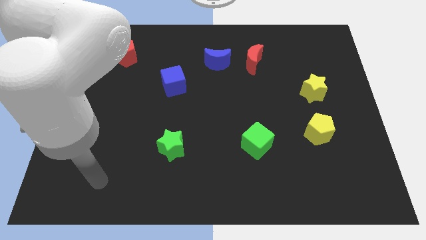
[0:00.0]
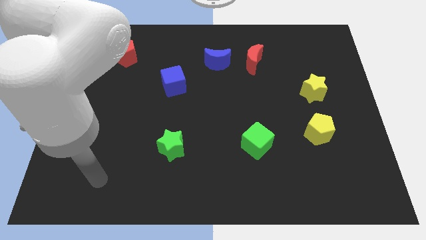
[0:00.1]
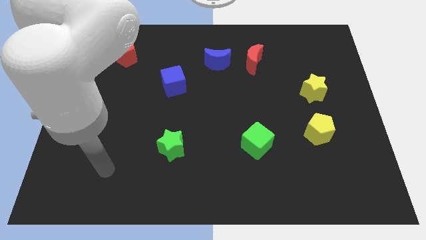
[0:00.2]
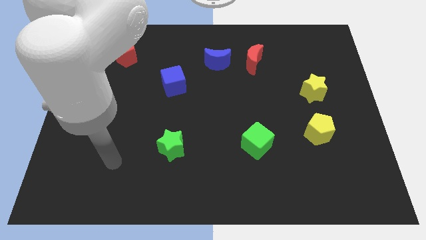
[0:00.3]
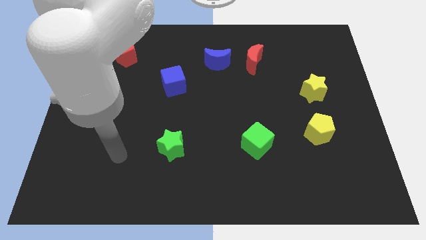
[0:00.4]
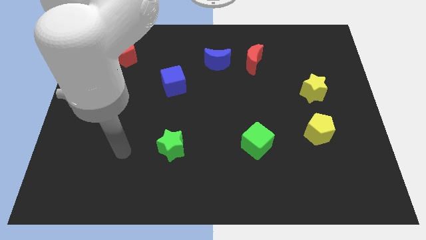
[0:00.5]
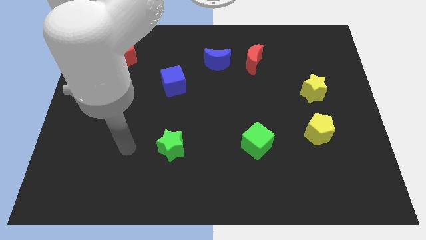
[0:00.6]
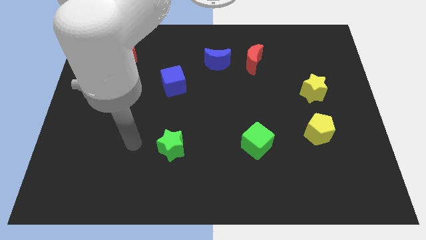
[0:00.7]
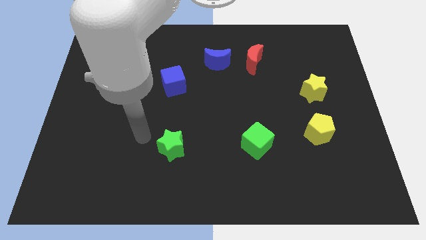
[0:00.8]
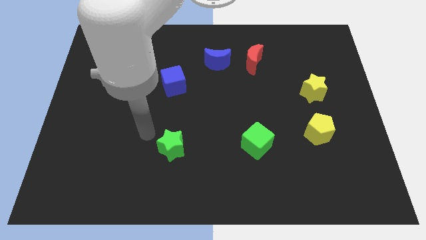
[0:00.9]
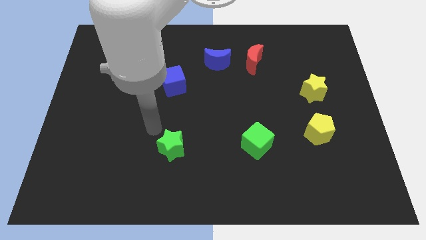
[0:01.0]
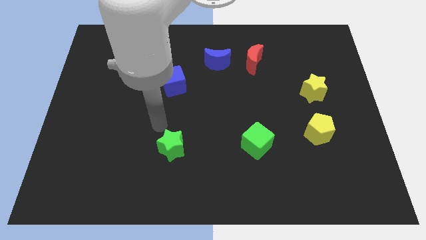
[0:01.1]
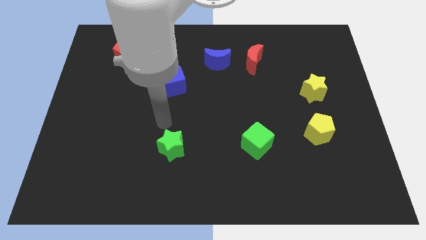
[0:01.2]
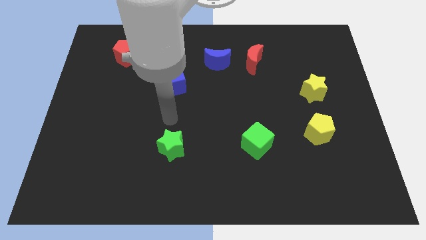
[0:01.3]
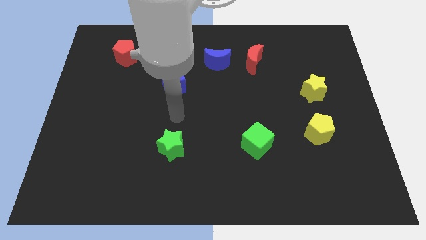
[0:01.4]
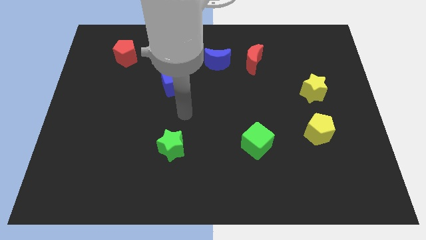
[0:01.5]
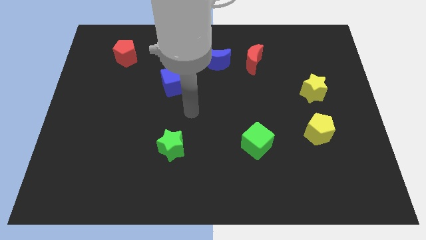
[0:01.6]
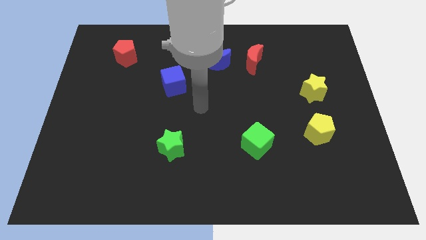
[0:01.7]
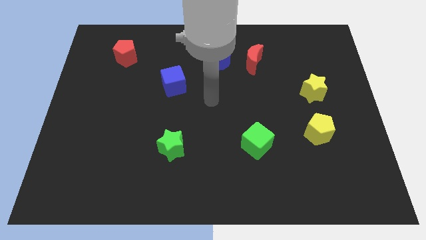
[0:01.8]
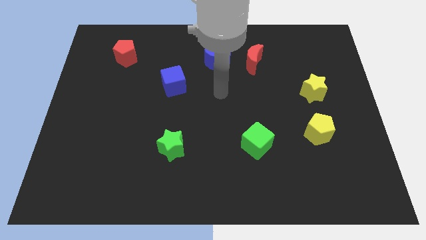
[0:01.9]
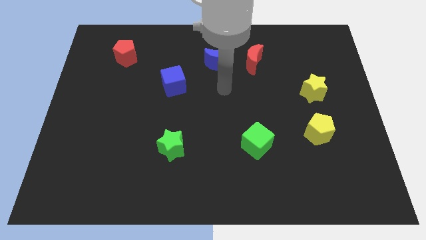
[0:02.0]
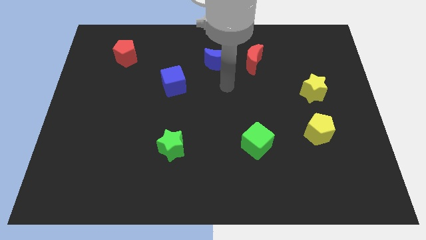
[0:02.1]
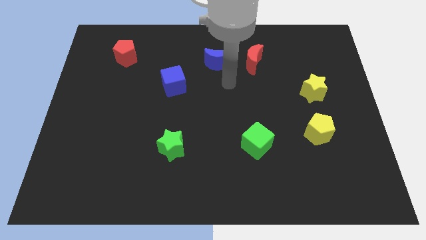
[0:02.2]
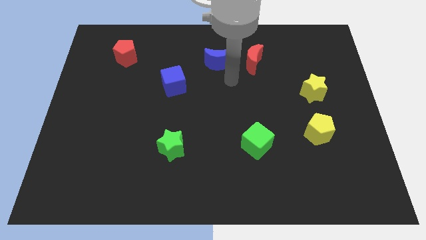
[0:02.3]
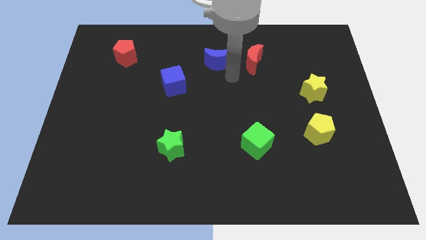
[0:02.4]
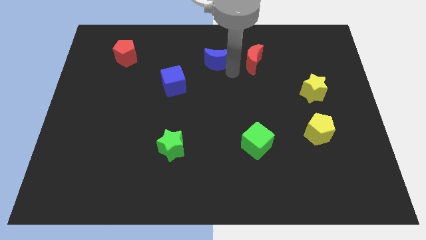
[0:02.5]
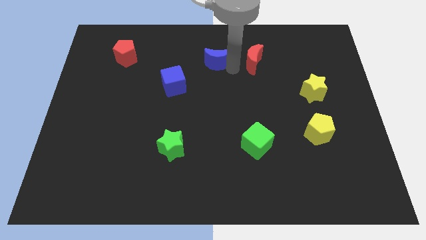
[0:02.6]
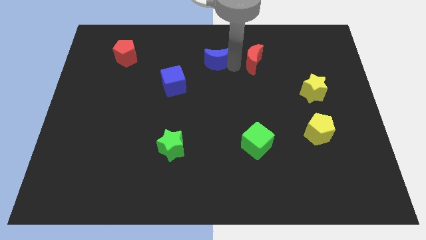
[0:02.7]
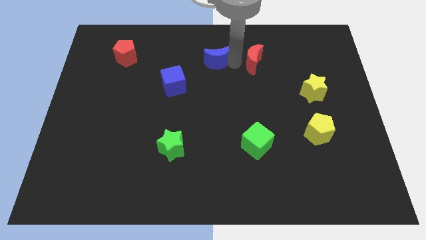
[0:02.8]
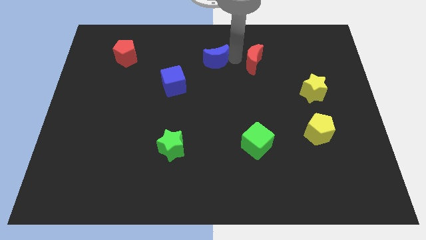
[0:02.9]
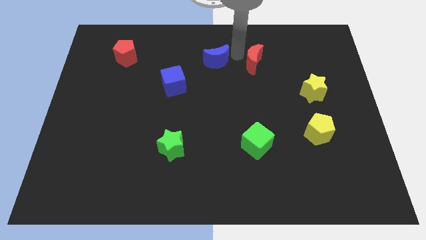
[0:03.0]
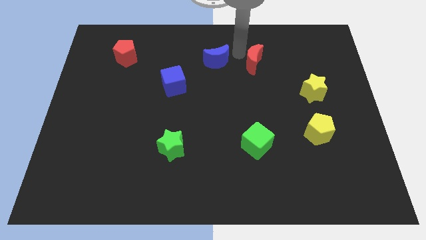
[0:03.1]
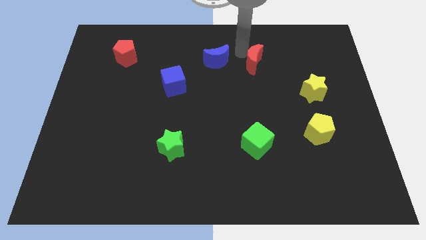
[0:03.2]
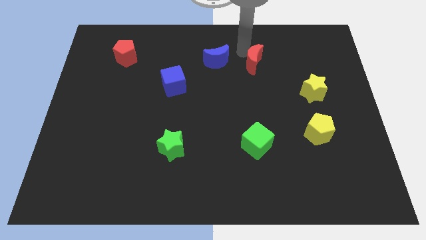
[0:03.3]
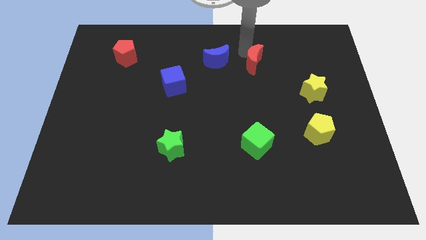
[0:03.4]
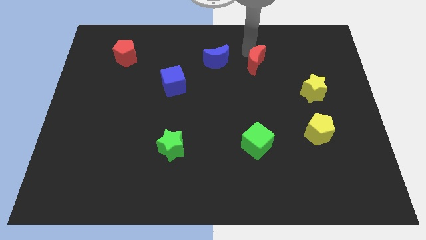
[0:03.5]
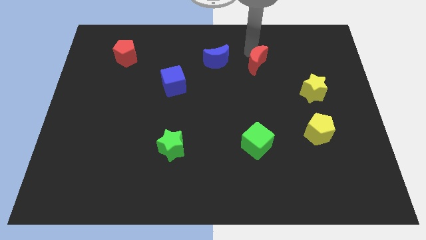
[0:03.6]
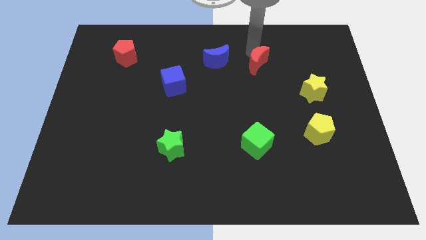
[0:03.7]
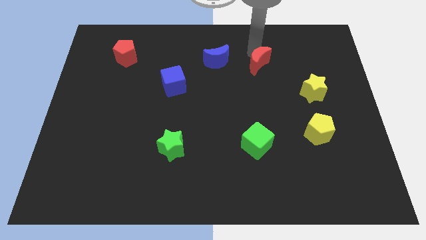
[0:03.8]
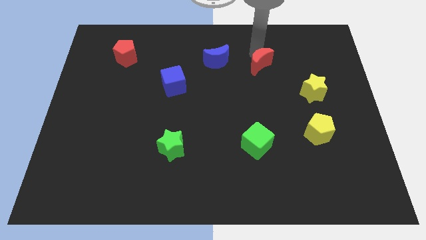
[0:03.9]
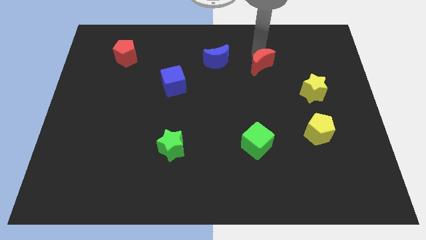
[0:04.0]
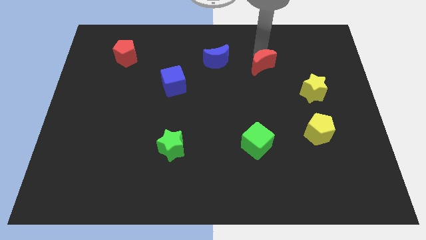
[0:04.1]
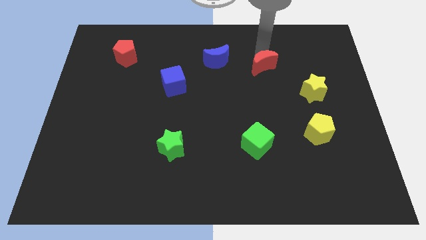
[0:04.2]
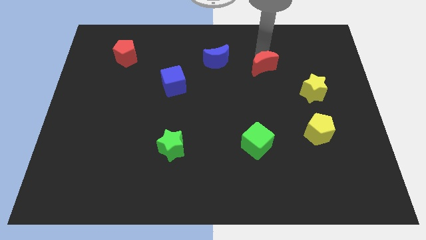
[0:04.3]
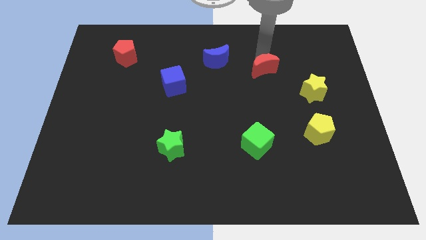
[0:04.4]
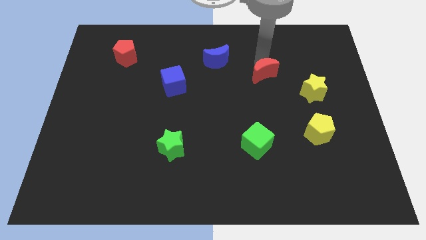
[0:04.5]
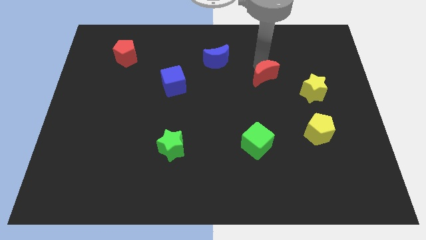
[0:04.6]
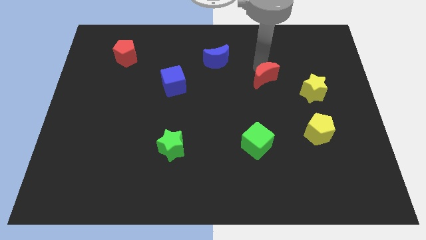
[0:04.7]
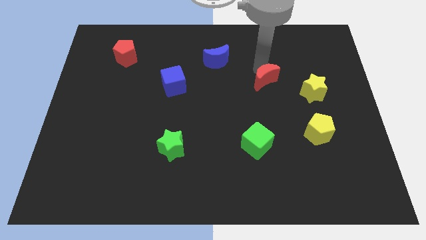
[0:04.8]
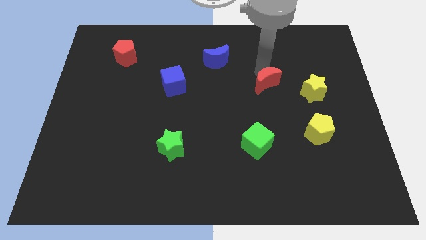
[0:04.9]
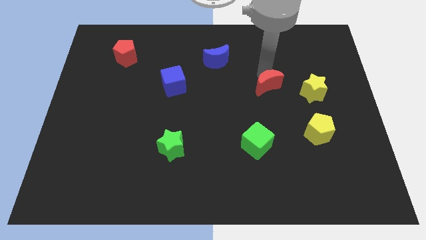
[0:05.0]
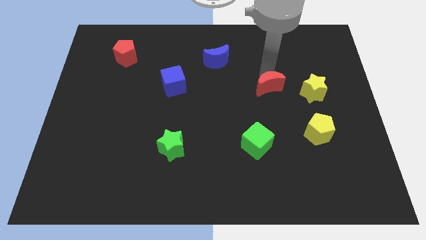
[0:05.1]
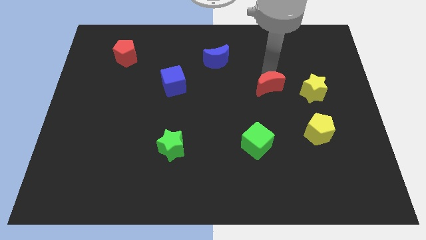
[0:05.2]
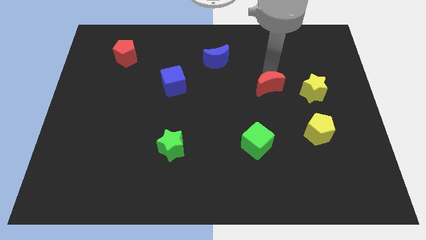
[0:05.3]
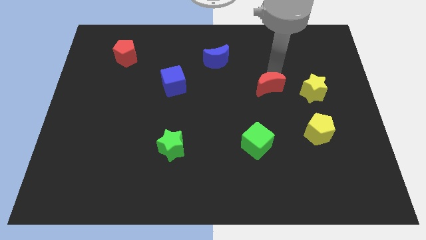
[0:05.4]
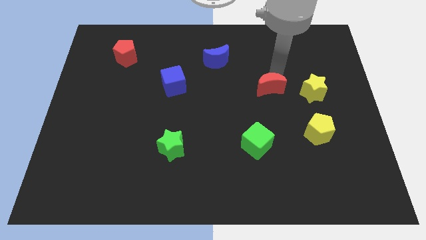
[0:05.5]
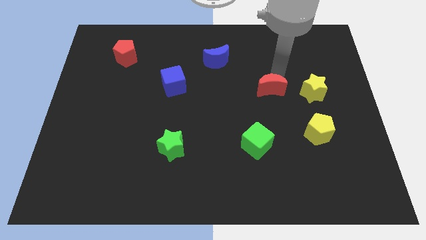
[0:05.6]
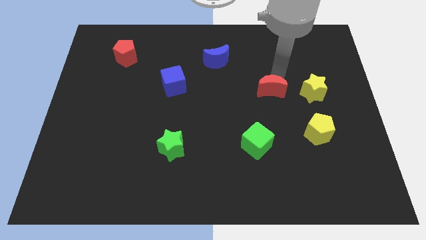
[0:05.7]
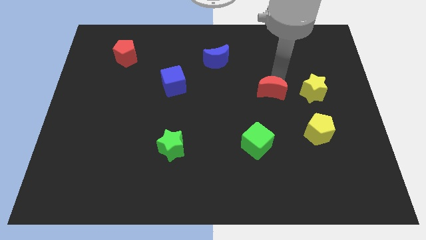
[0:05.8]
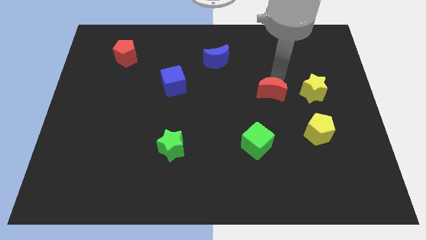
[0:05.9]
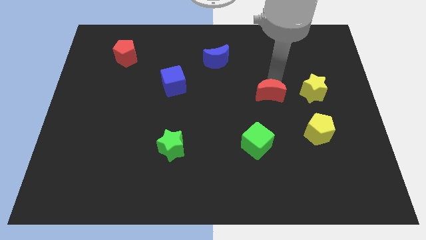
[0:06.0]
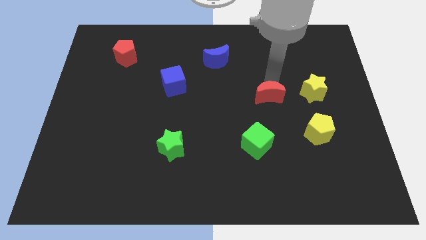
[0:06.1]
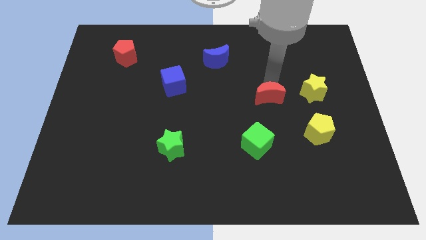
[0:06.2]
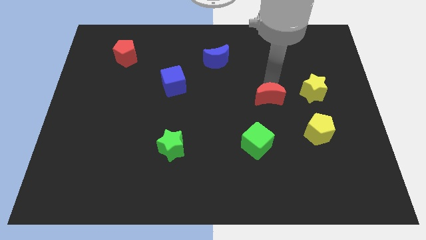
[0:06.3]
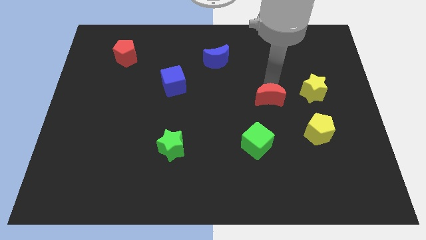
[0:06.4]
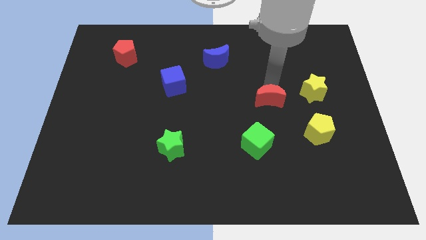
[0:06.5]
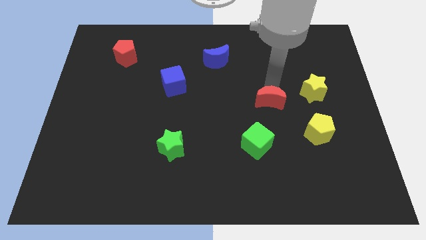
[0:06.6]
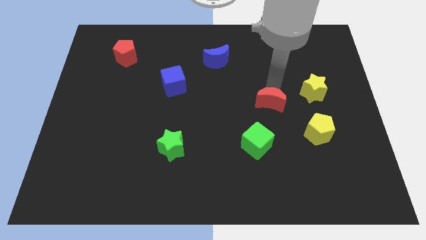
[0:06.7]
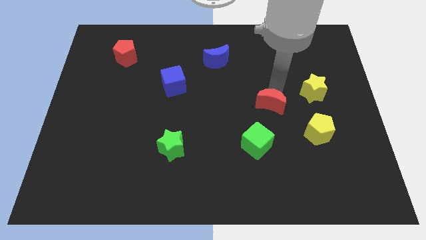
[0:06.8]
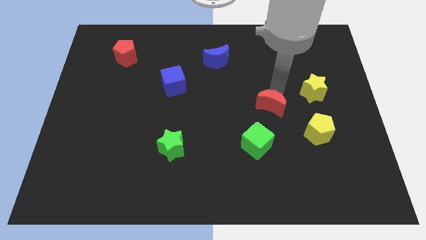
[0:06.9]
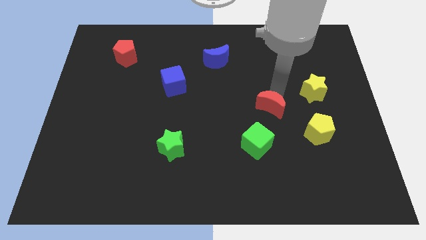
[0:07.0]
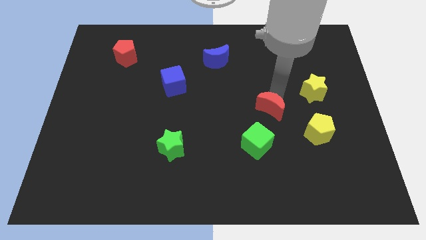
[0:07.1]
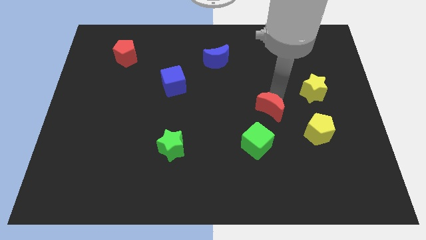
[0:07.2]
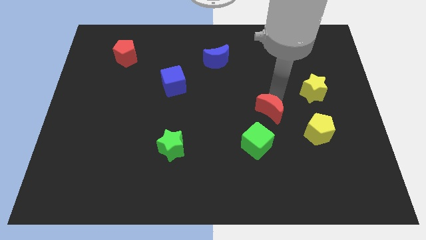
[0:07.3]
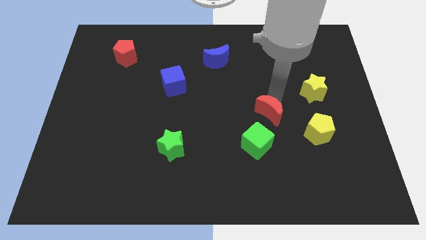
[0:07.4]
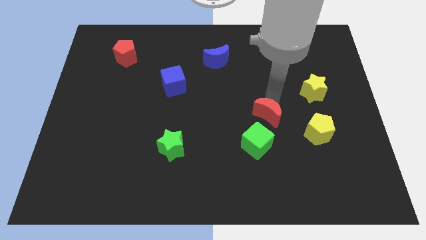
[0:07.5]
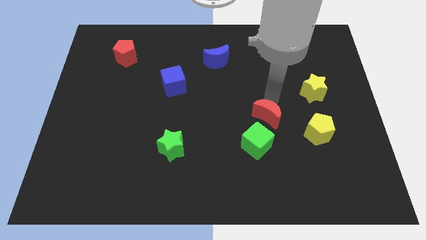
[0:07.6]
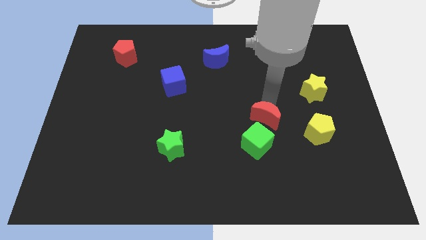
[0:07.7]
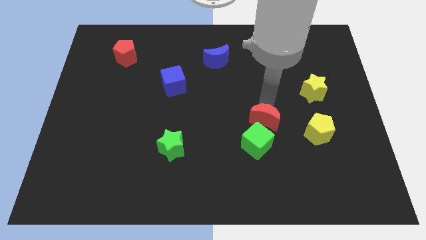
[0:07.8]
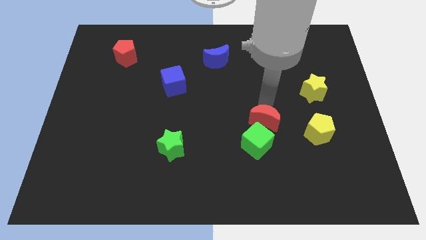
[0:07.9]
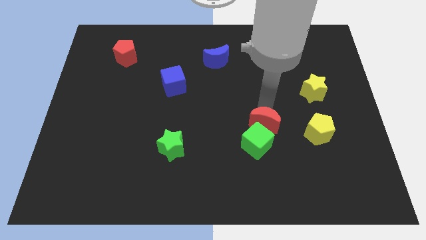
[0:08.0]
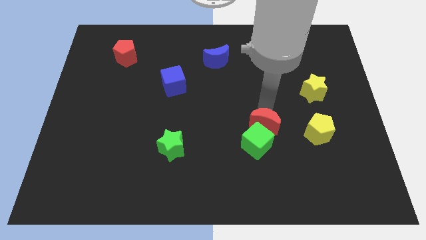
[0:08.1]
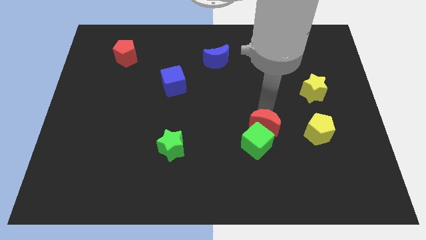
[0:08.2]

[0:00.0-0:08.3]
slide the red moon towards the green cube

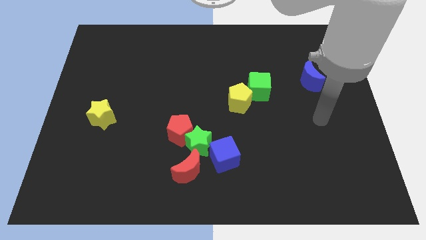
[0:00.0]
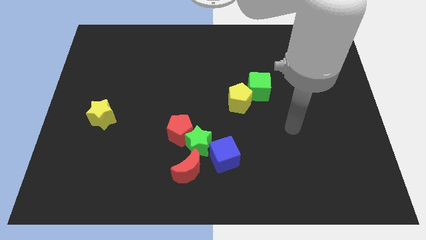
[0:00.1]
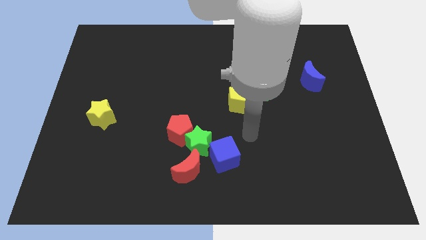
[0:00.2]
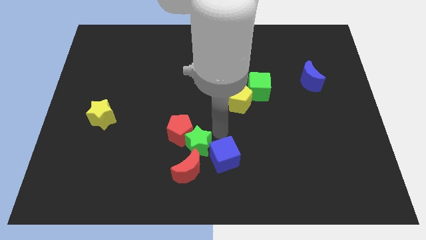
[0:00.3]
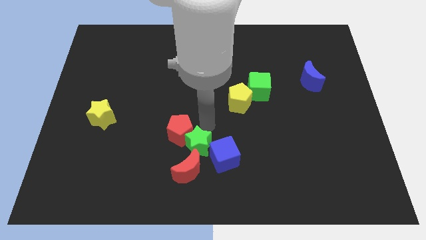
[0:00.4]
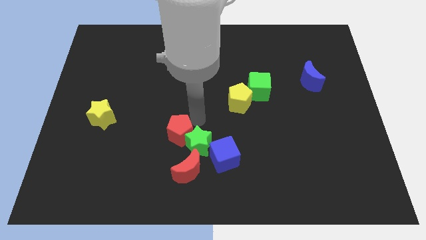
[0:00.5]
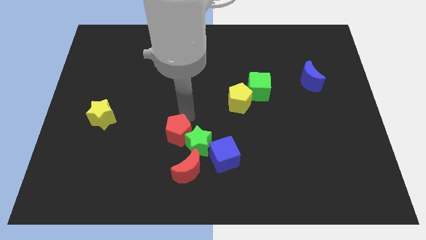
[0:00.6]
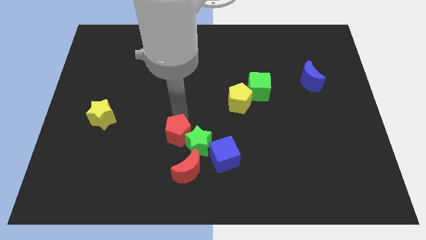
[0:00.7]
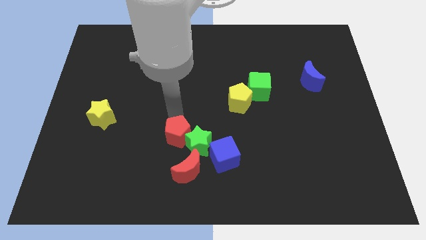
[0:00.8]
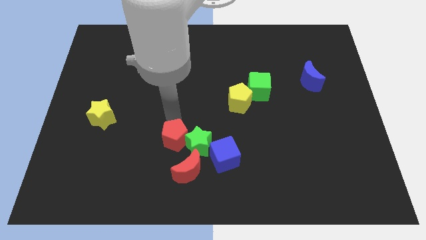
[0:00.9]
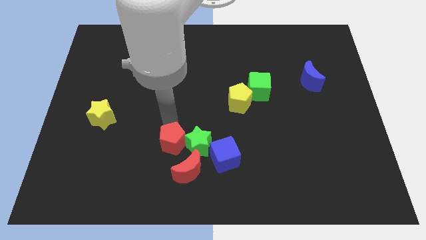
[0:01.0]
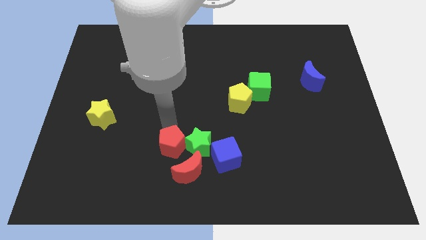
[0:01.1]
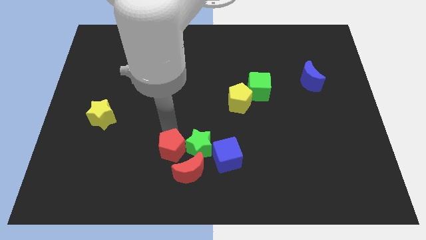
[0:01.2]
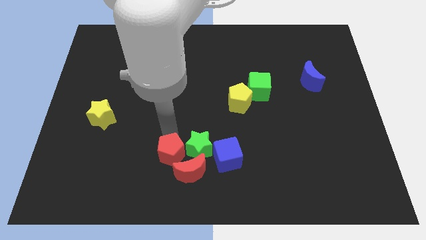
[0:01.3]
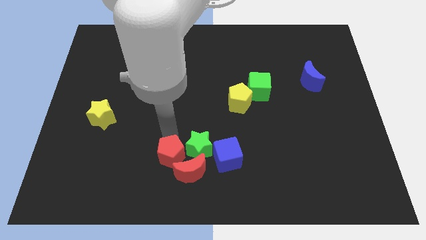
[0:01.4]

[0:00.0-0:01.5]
push the red pentagon towards the red moon
